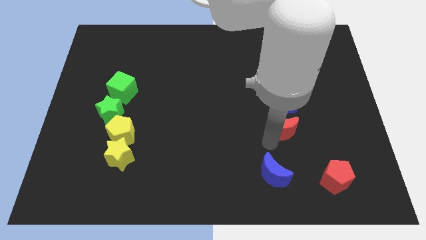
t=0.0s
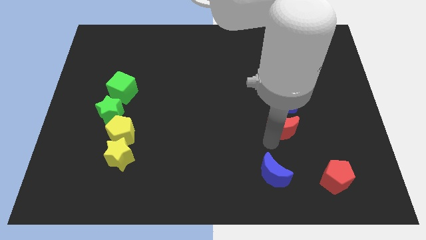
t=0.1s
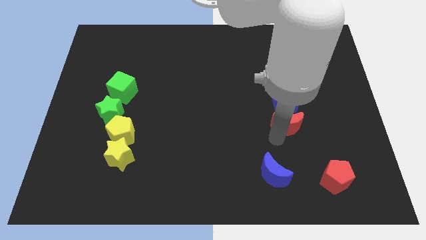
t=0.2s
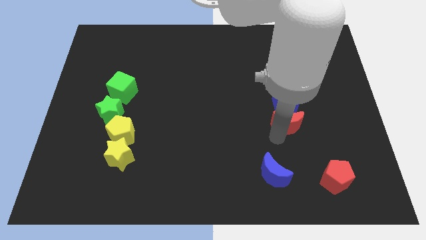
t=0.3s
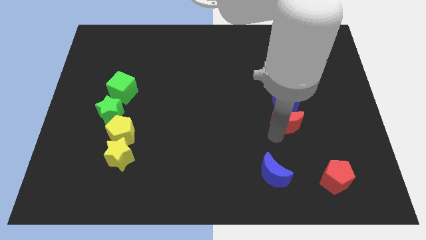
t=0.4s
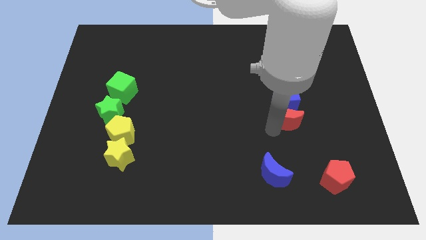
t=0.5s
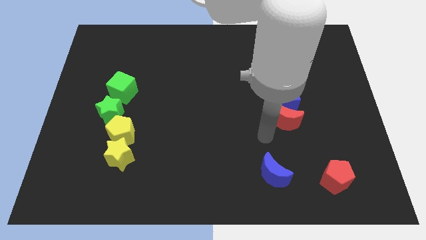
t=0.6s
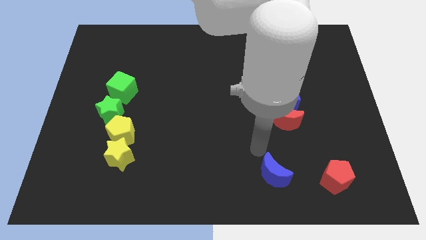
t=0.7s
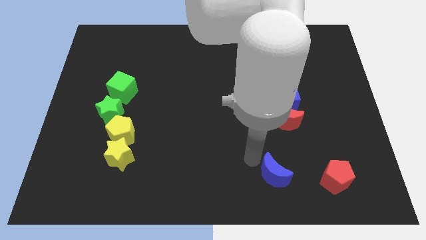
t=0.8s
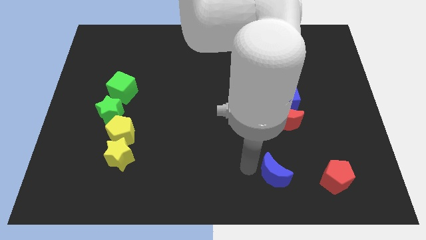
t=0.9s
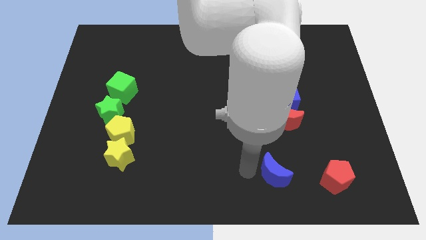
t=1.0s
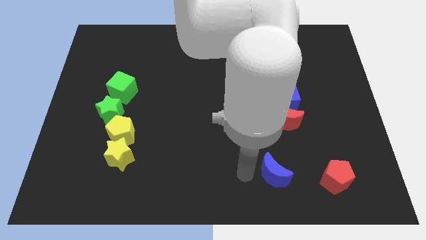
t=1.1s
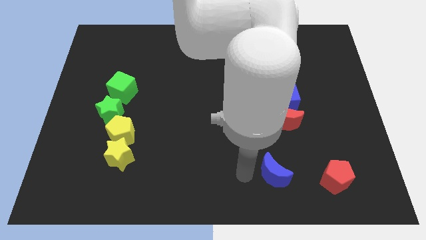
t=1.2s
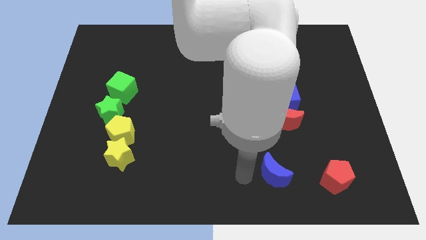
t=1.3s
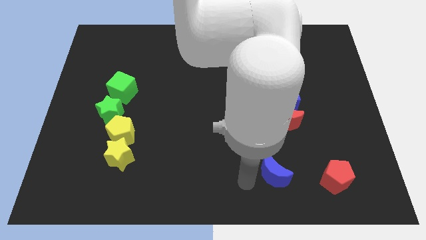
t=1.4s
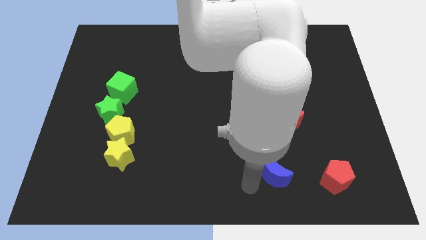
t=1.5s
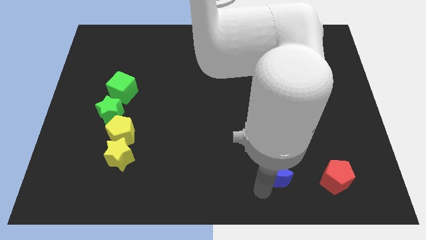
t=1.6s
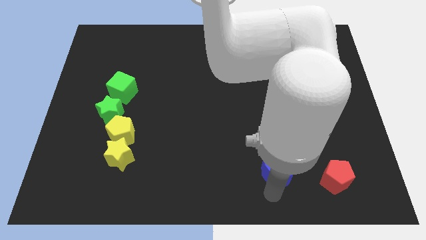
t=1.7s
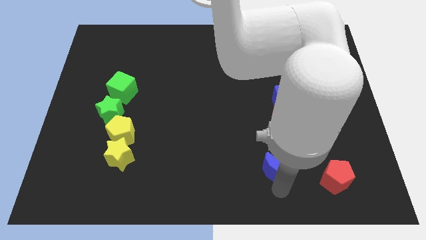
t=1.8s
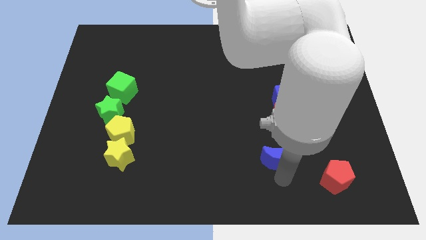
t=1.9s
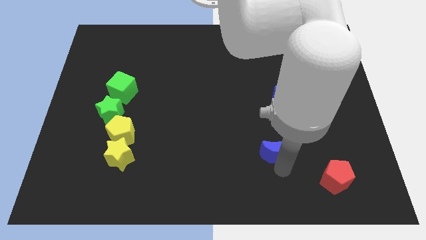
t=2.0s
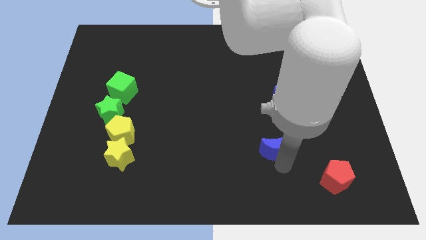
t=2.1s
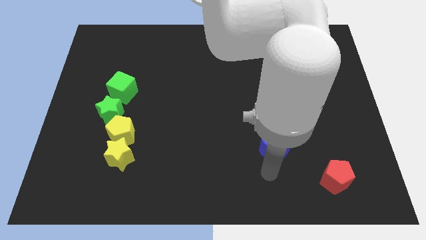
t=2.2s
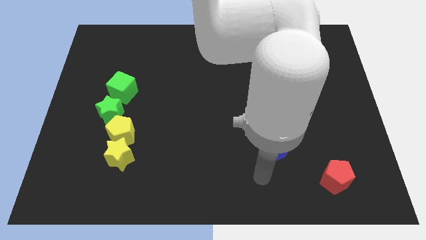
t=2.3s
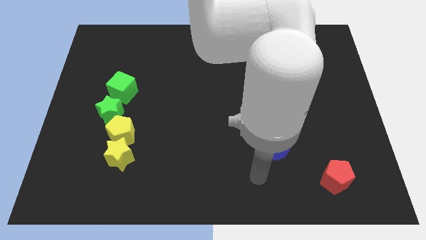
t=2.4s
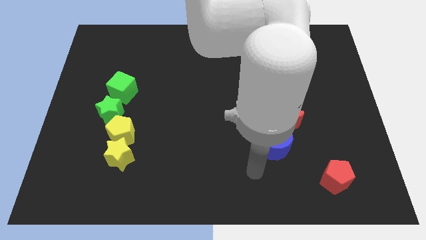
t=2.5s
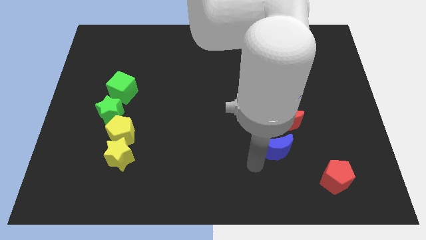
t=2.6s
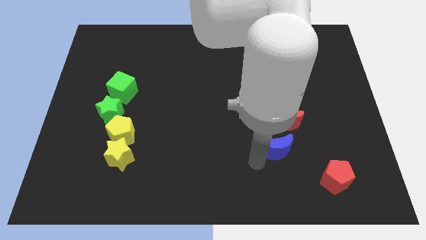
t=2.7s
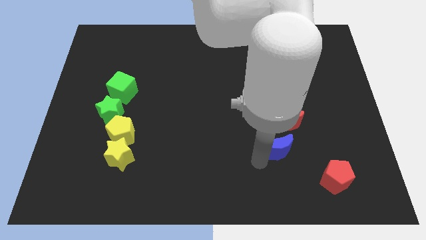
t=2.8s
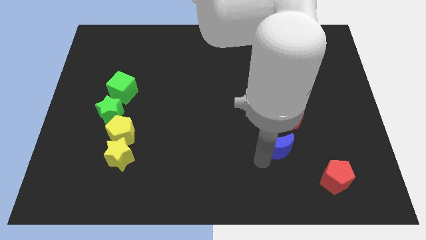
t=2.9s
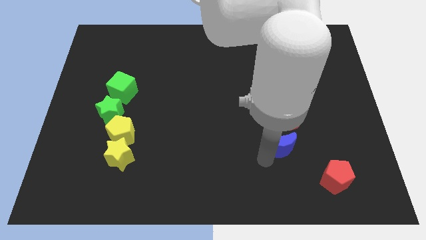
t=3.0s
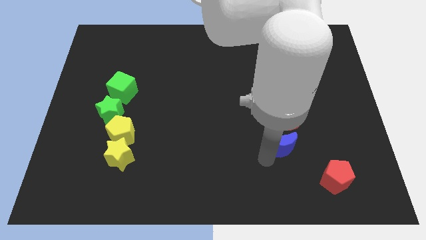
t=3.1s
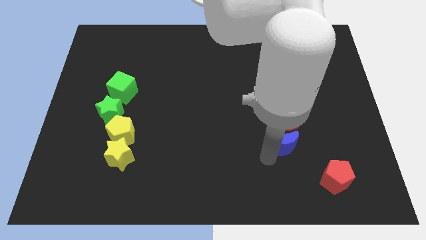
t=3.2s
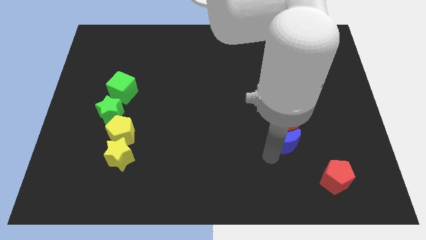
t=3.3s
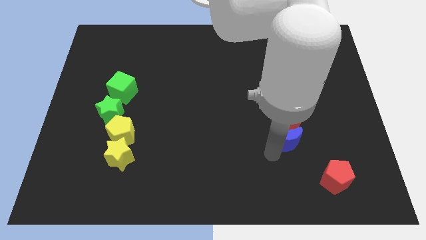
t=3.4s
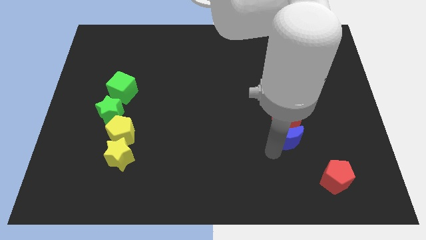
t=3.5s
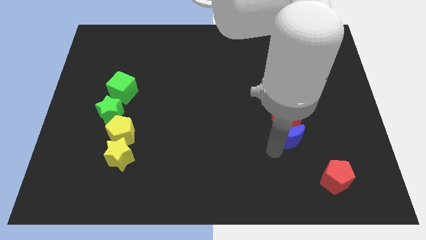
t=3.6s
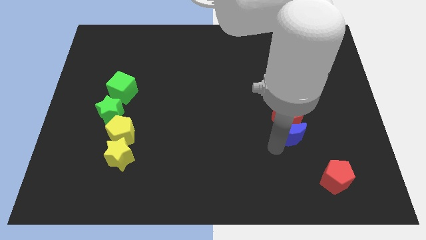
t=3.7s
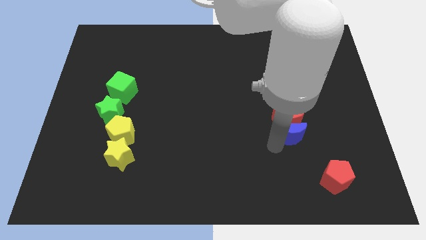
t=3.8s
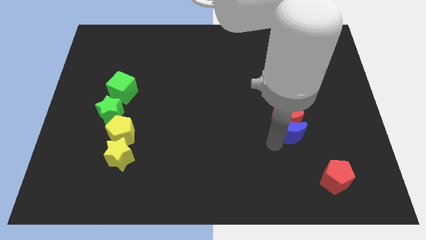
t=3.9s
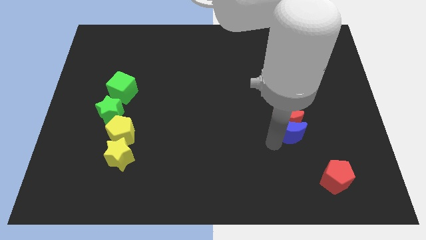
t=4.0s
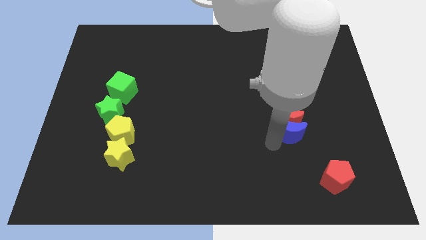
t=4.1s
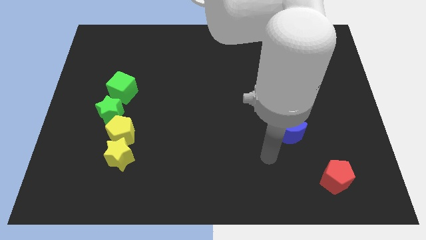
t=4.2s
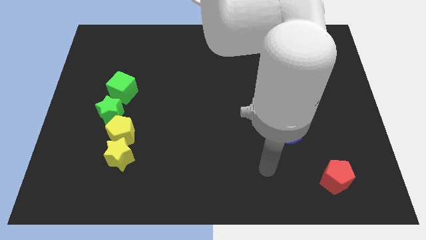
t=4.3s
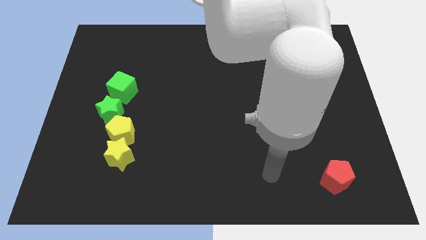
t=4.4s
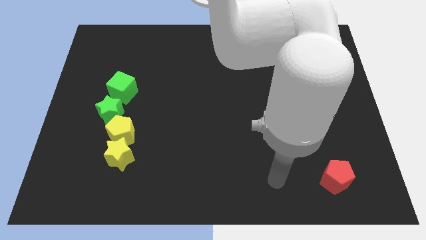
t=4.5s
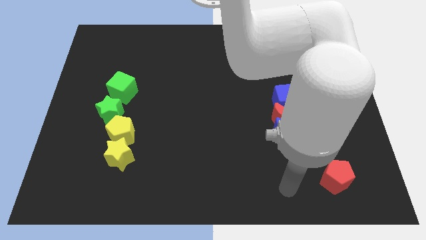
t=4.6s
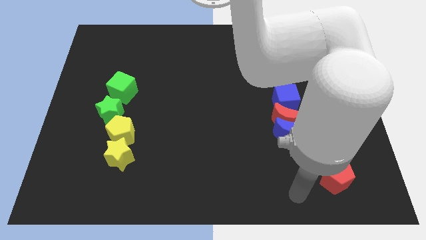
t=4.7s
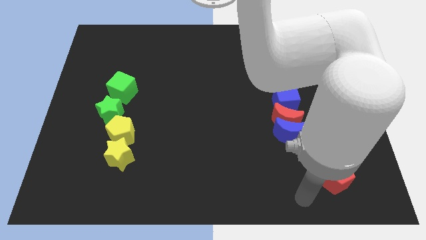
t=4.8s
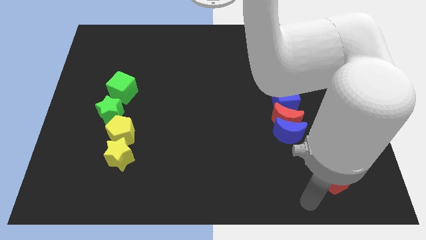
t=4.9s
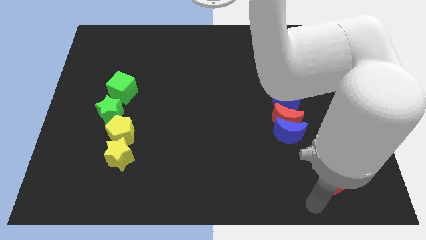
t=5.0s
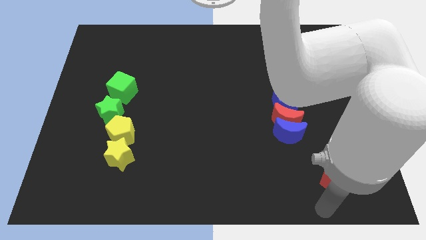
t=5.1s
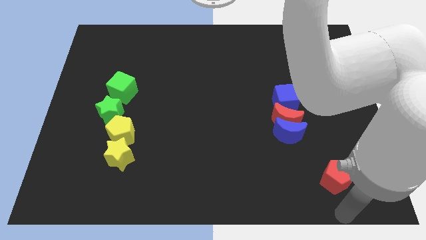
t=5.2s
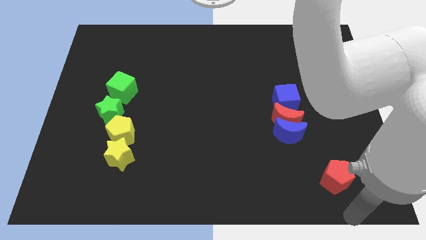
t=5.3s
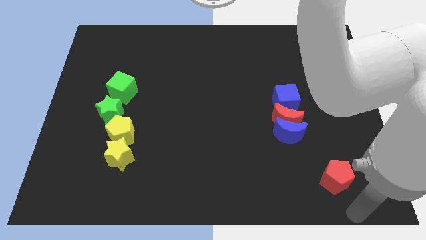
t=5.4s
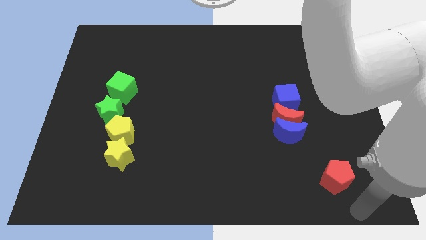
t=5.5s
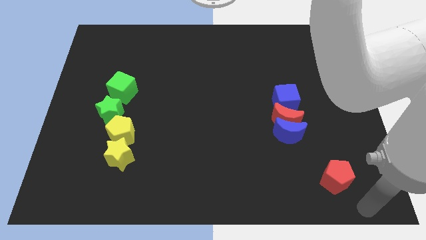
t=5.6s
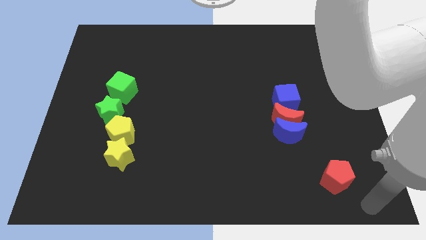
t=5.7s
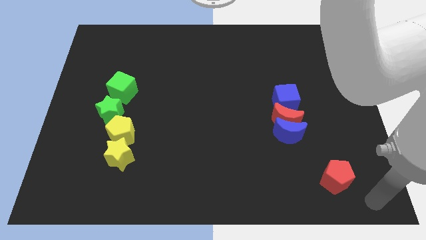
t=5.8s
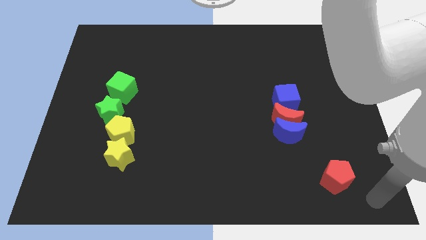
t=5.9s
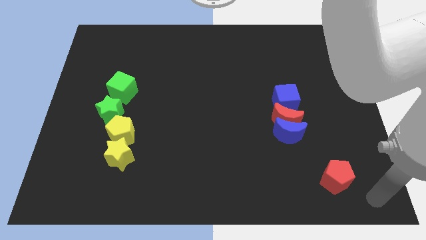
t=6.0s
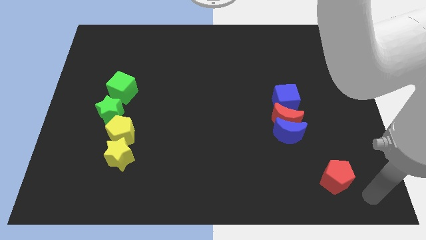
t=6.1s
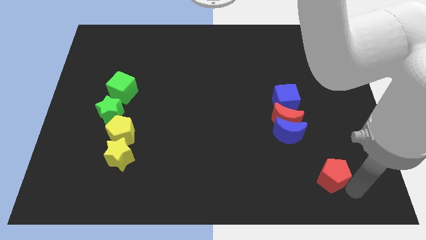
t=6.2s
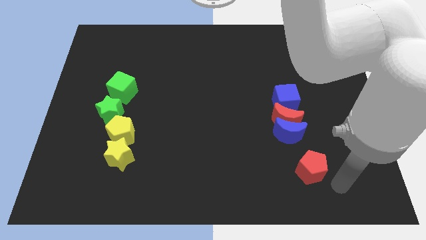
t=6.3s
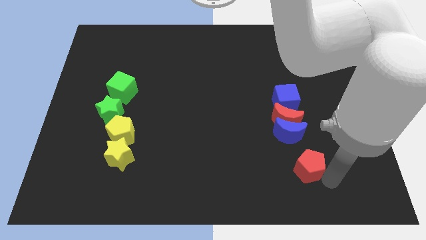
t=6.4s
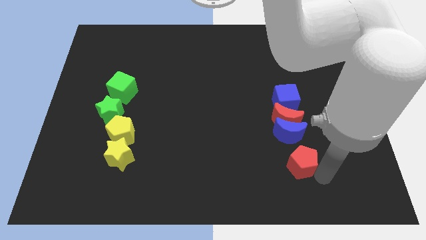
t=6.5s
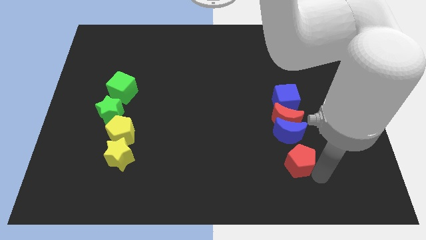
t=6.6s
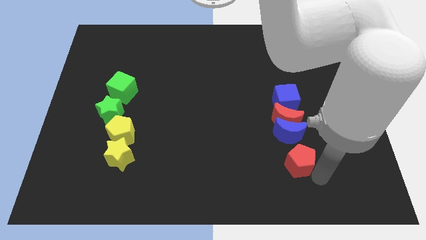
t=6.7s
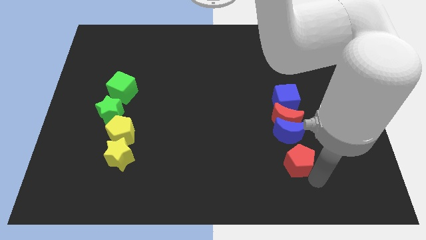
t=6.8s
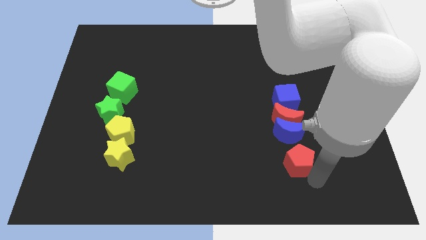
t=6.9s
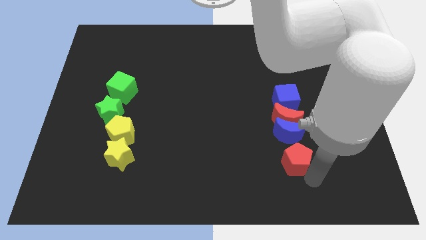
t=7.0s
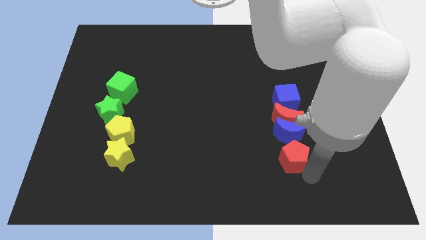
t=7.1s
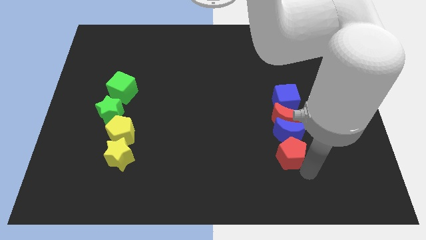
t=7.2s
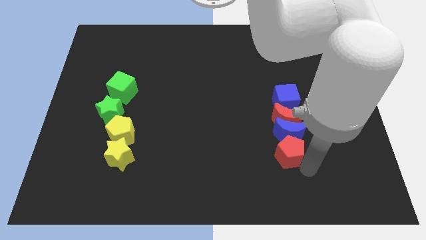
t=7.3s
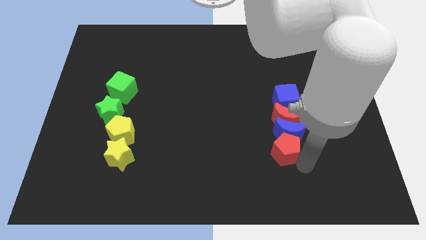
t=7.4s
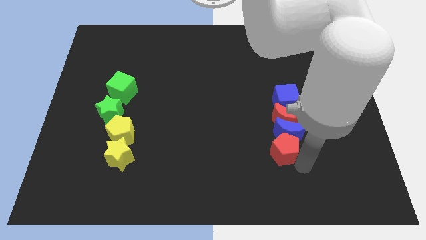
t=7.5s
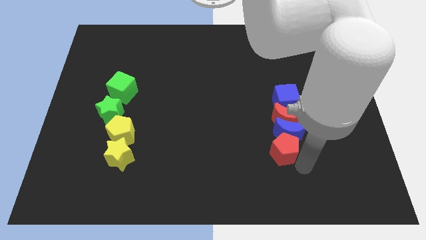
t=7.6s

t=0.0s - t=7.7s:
arrange blue cube red crescent blue semicircle and red pentagon in a vertical line

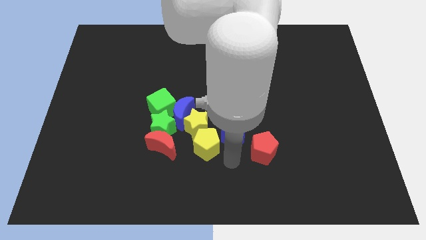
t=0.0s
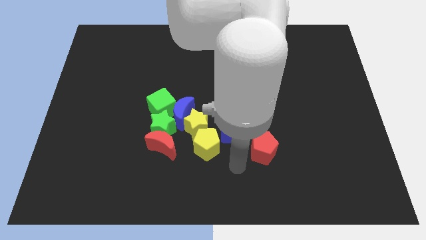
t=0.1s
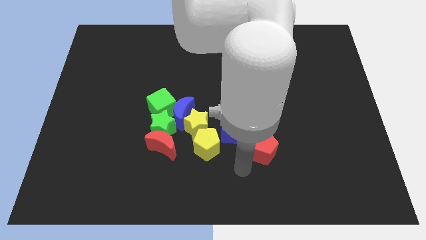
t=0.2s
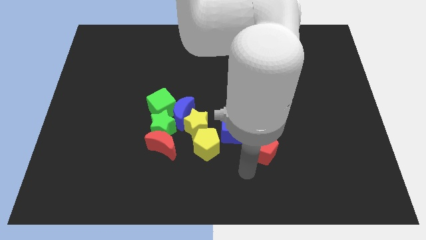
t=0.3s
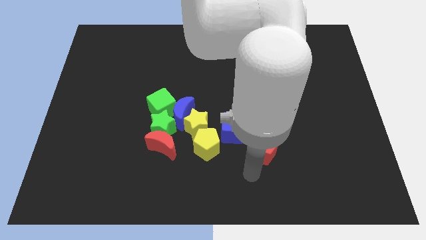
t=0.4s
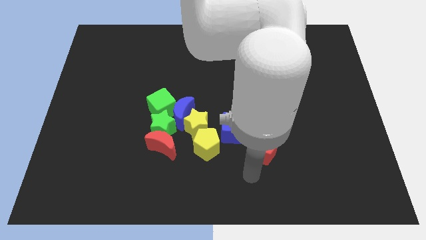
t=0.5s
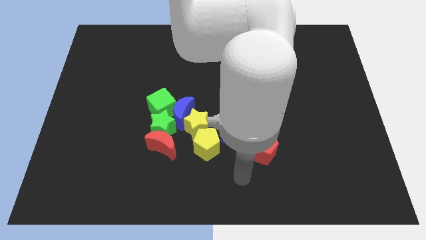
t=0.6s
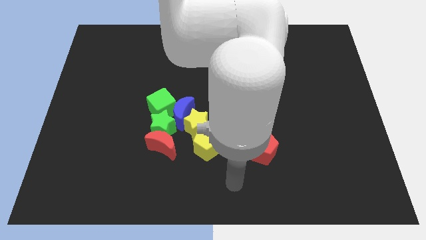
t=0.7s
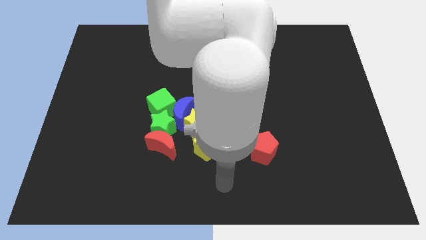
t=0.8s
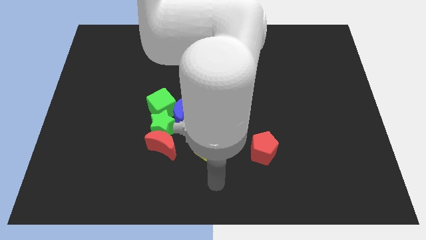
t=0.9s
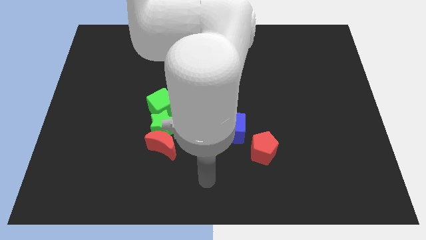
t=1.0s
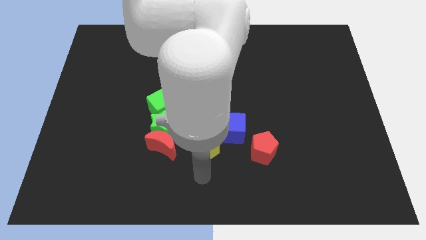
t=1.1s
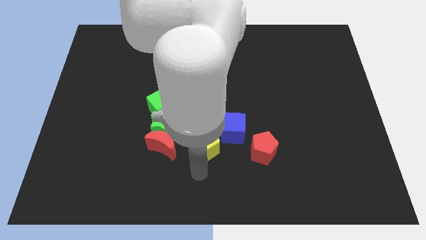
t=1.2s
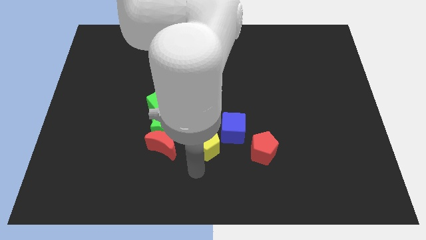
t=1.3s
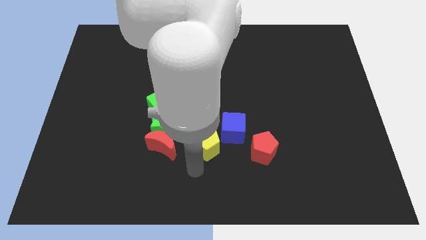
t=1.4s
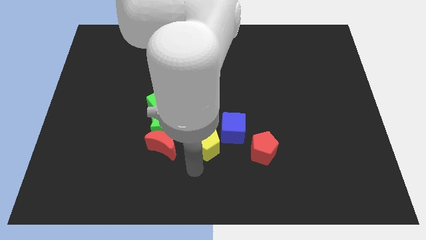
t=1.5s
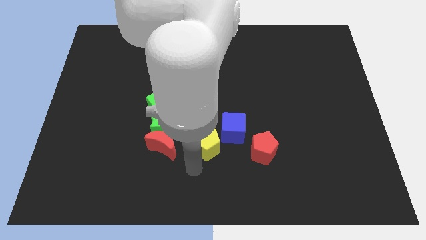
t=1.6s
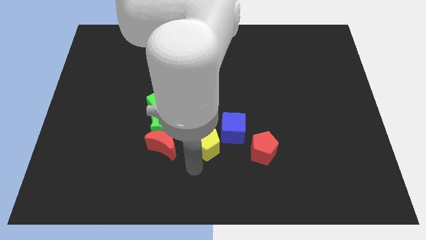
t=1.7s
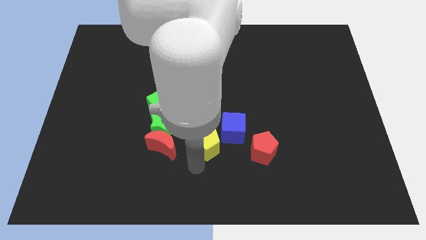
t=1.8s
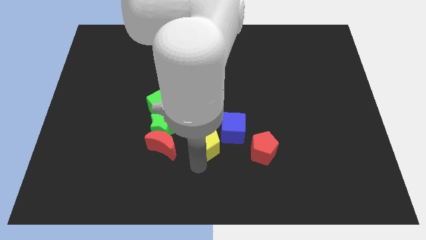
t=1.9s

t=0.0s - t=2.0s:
point the arm below the yellow pentagon
